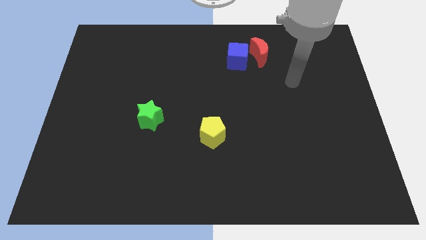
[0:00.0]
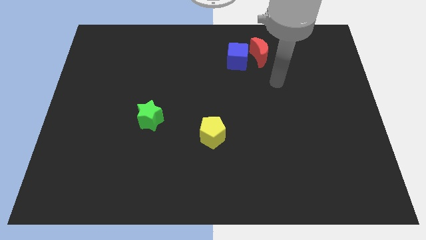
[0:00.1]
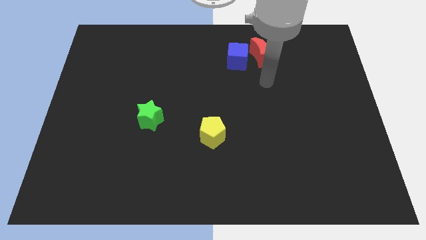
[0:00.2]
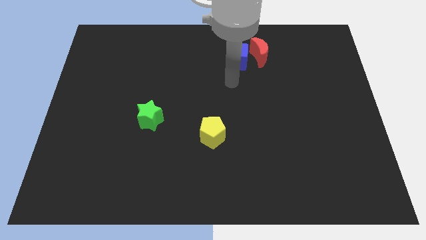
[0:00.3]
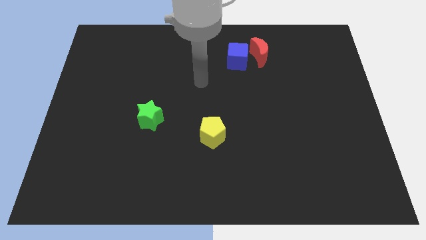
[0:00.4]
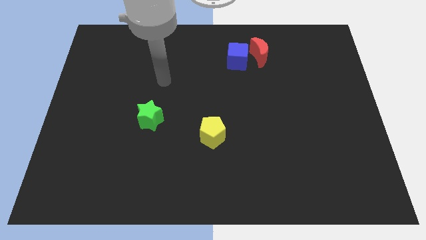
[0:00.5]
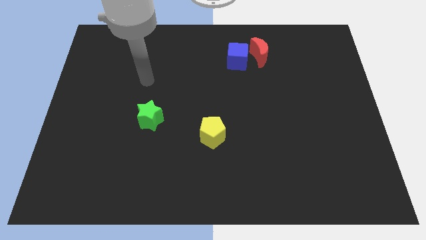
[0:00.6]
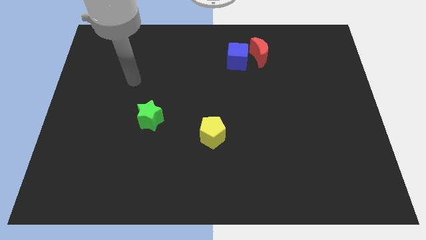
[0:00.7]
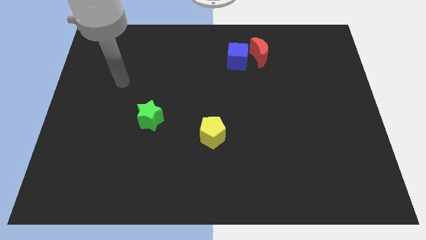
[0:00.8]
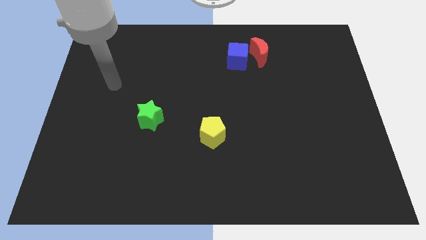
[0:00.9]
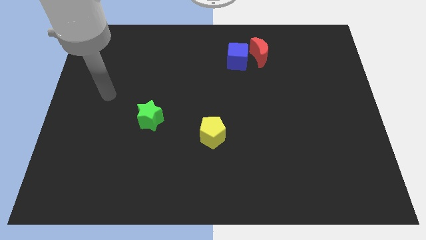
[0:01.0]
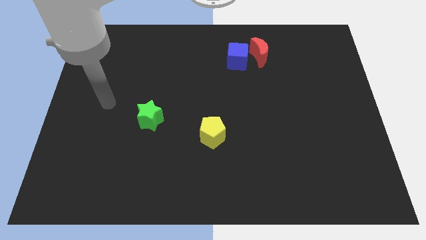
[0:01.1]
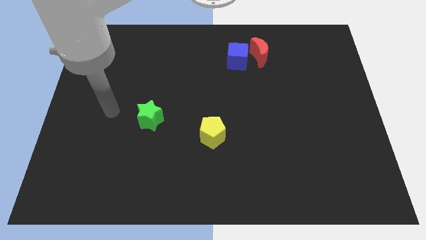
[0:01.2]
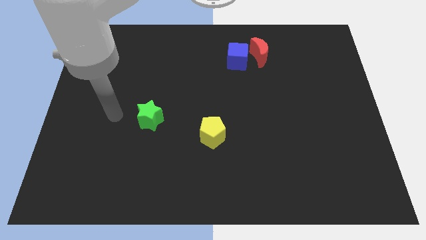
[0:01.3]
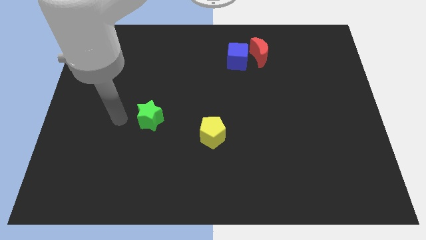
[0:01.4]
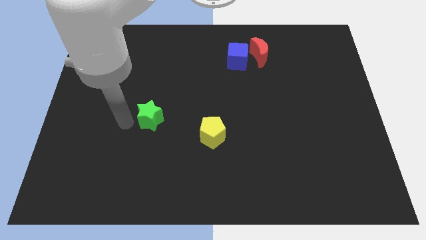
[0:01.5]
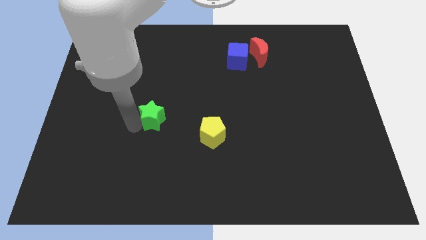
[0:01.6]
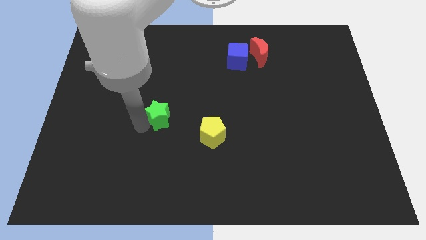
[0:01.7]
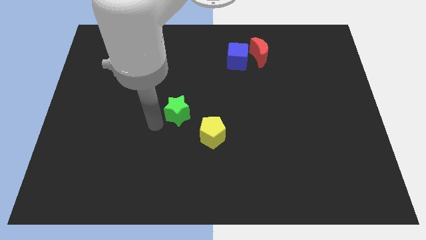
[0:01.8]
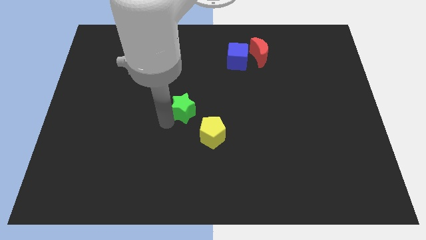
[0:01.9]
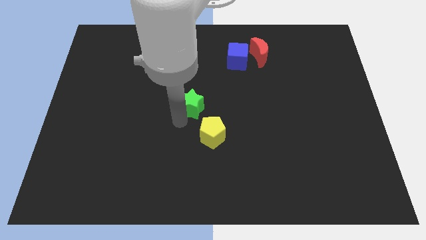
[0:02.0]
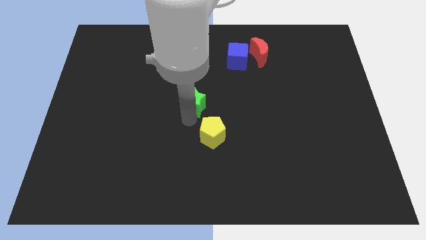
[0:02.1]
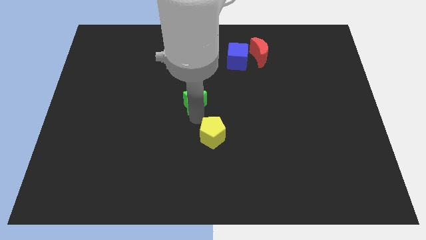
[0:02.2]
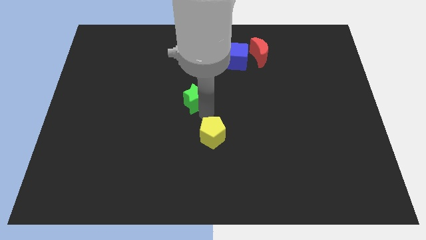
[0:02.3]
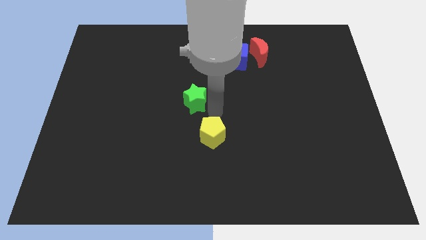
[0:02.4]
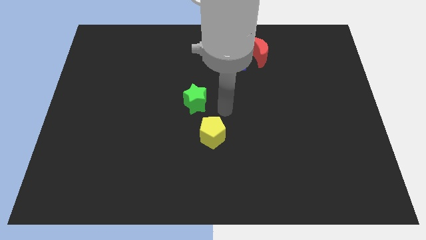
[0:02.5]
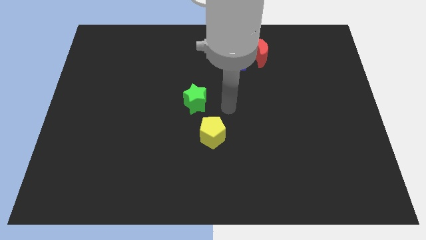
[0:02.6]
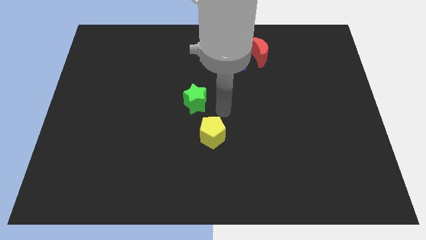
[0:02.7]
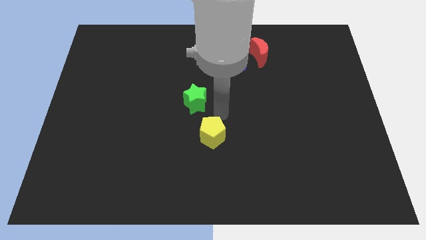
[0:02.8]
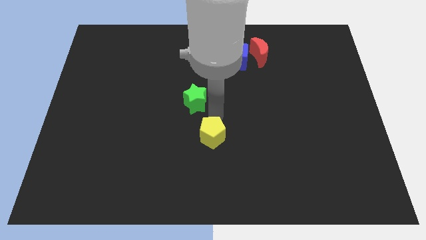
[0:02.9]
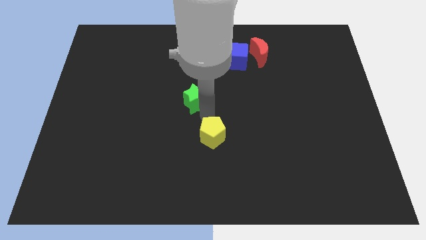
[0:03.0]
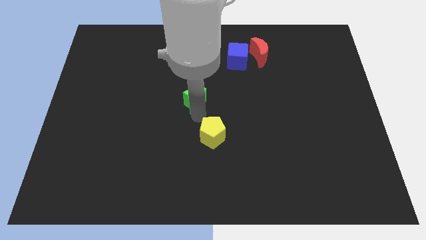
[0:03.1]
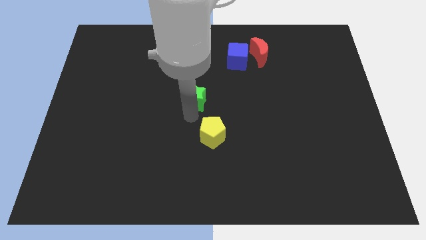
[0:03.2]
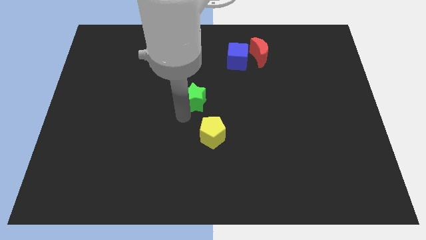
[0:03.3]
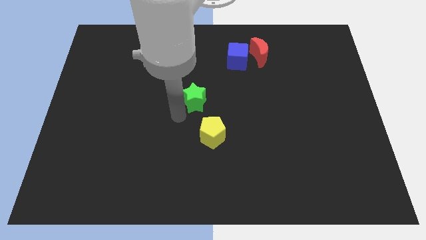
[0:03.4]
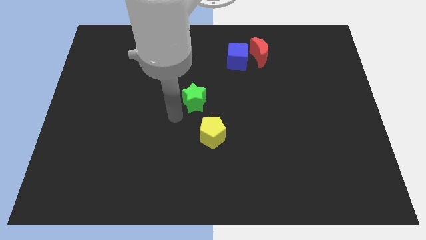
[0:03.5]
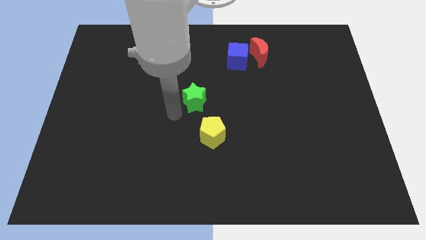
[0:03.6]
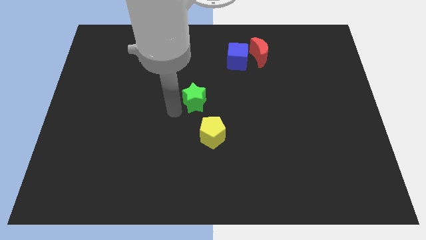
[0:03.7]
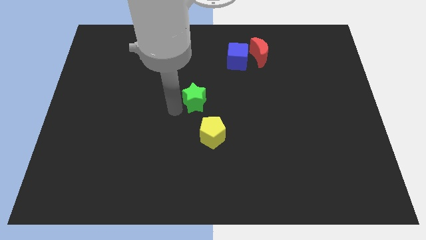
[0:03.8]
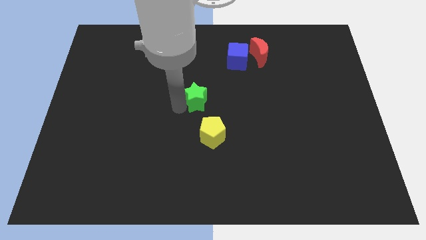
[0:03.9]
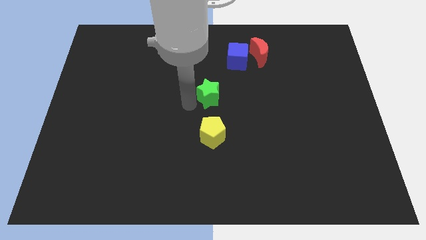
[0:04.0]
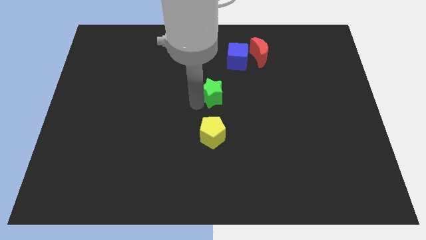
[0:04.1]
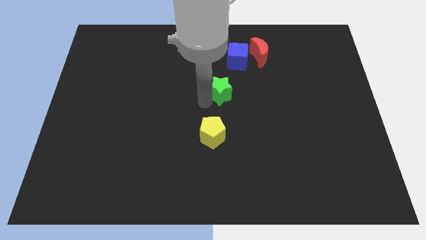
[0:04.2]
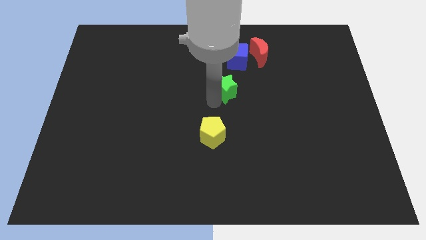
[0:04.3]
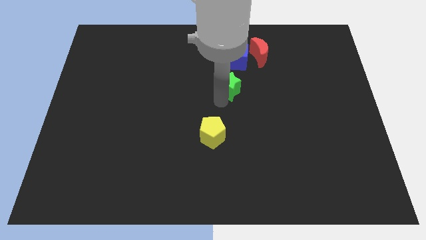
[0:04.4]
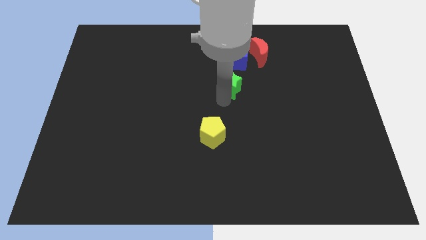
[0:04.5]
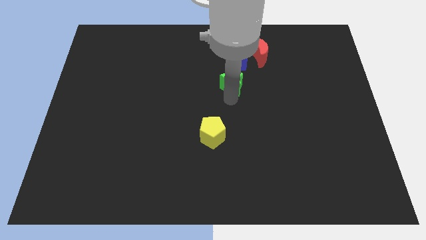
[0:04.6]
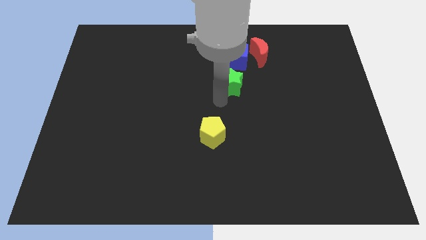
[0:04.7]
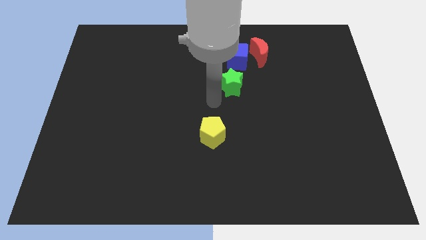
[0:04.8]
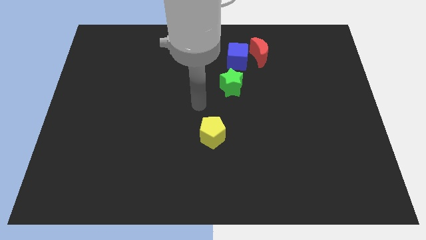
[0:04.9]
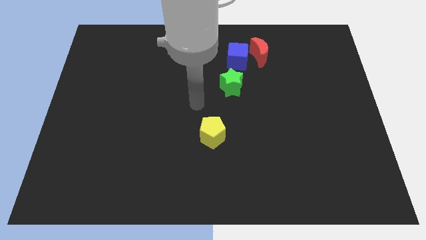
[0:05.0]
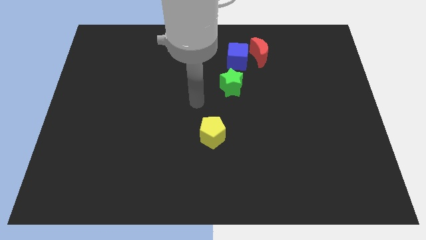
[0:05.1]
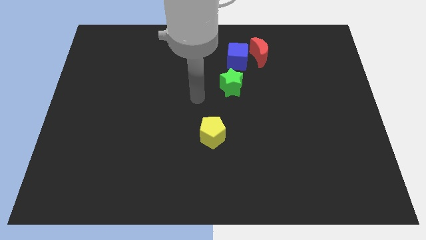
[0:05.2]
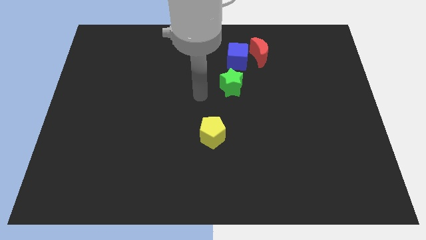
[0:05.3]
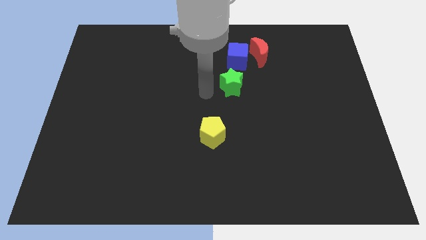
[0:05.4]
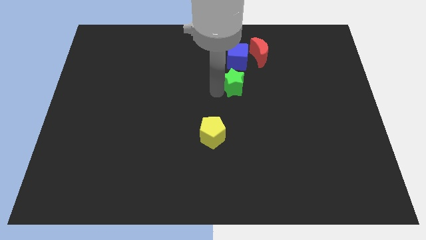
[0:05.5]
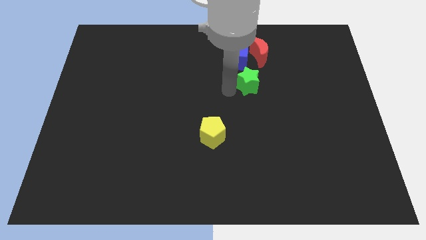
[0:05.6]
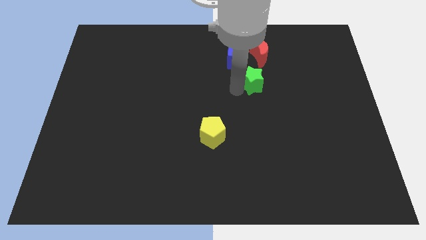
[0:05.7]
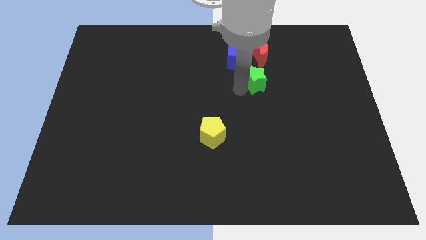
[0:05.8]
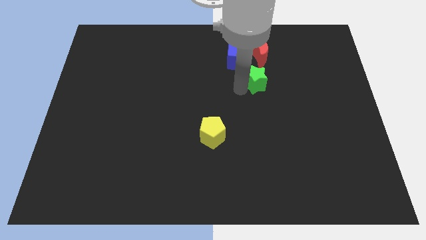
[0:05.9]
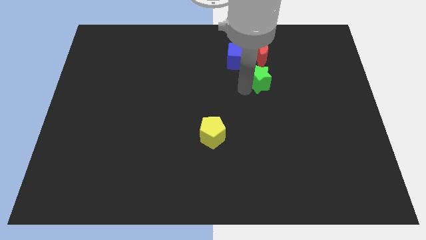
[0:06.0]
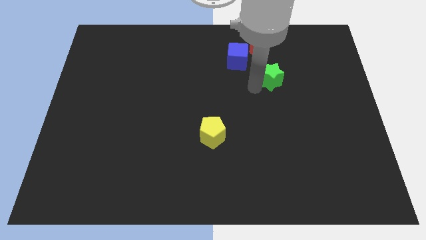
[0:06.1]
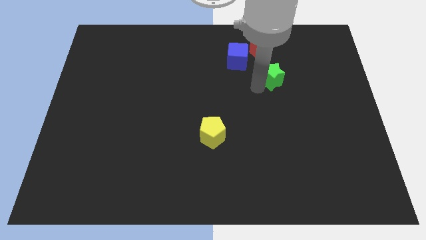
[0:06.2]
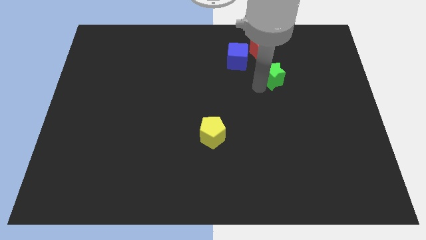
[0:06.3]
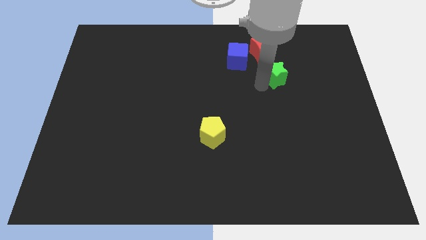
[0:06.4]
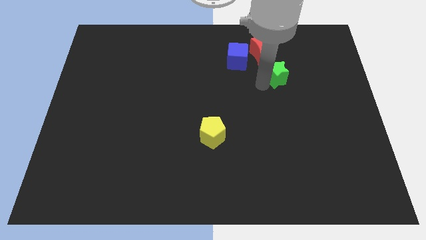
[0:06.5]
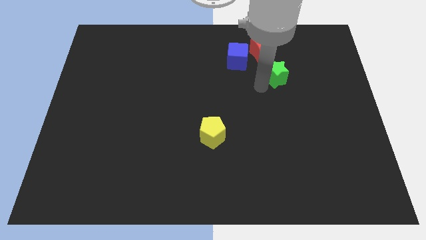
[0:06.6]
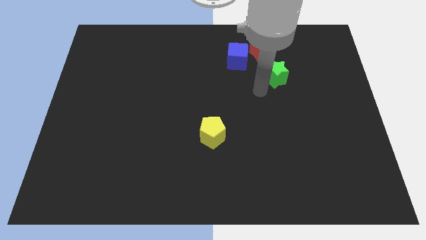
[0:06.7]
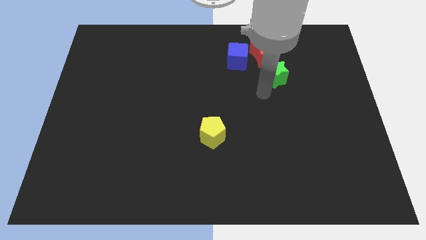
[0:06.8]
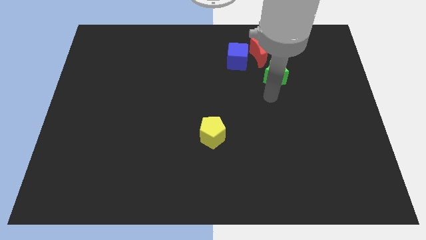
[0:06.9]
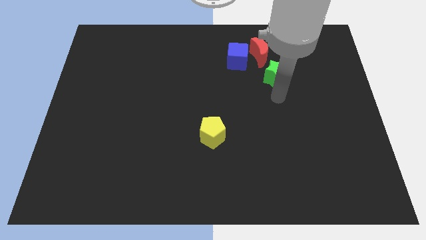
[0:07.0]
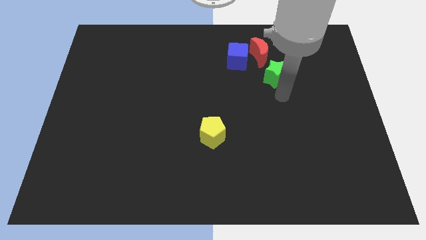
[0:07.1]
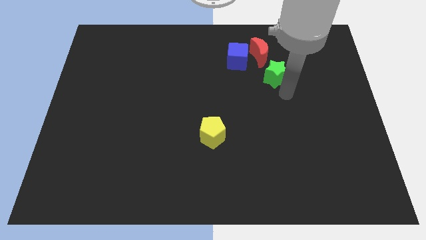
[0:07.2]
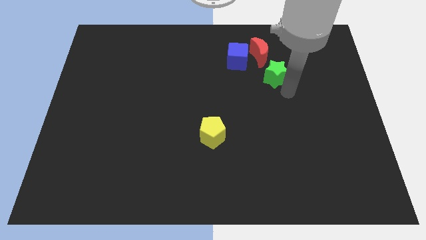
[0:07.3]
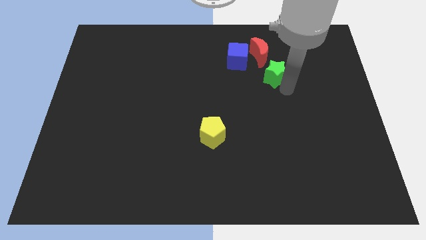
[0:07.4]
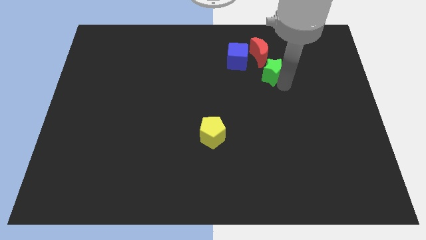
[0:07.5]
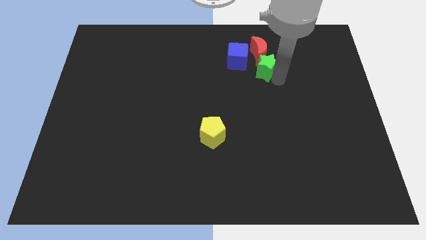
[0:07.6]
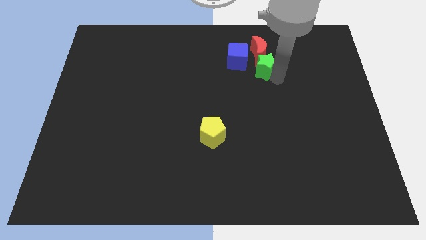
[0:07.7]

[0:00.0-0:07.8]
push the star next to the moon

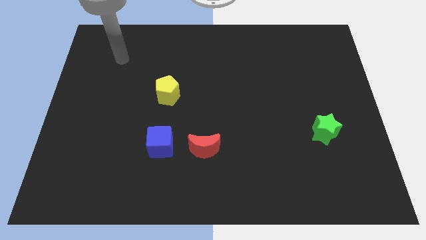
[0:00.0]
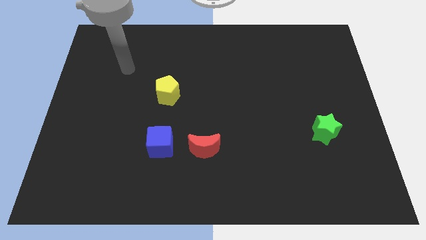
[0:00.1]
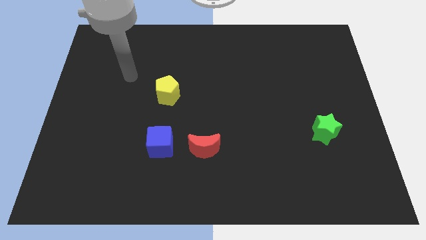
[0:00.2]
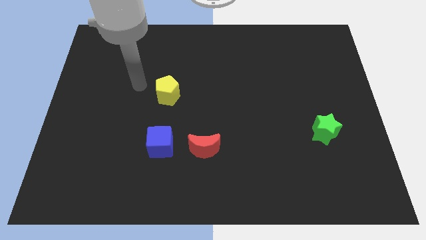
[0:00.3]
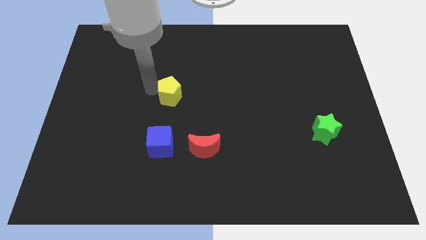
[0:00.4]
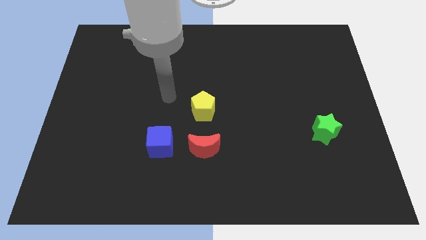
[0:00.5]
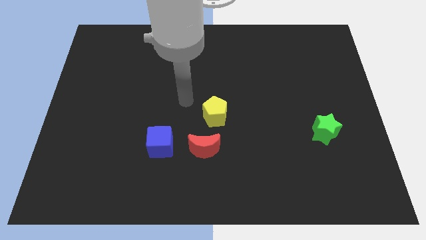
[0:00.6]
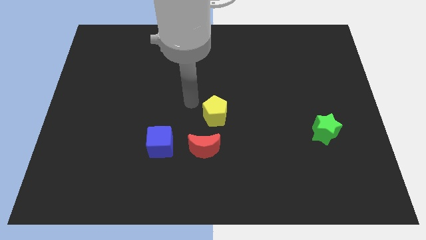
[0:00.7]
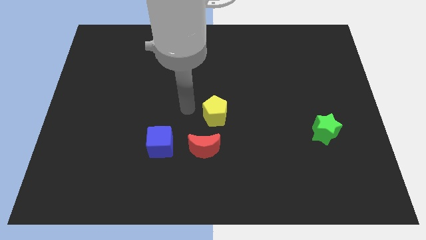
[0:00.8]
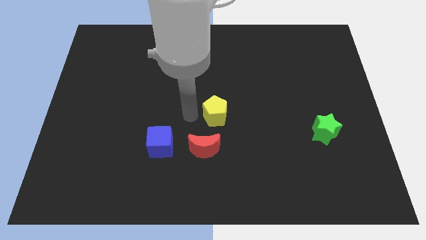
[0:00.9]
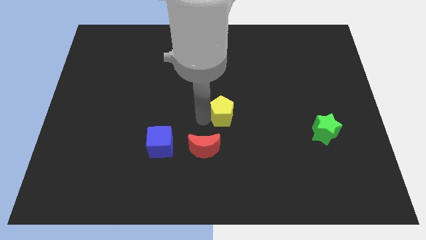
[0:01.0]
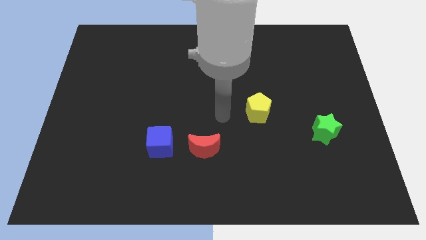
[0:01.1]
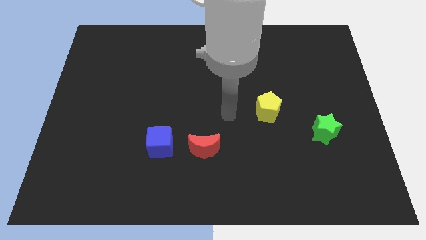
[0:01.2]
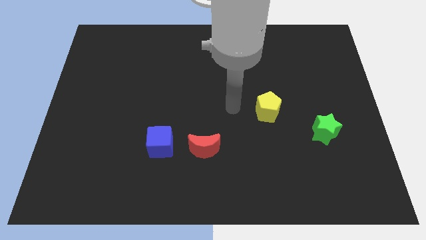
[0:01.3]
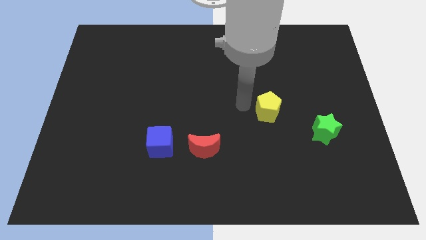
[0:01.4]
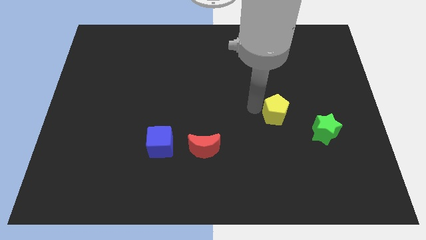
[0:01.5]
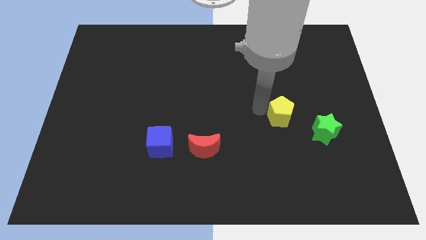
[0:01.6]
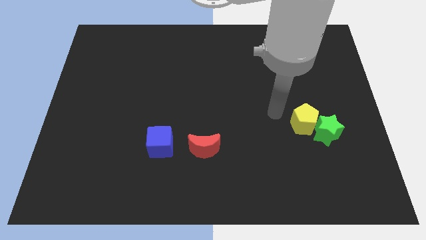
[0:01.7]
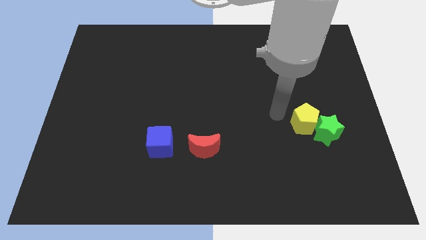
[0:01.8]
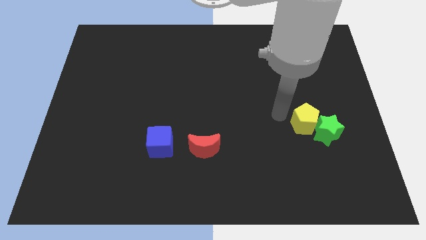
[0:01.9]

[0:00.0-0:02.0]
push the yellow block towards the star
